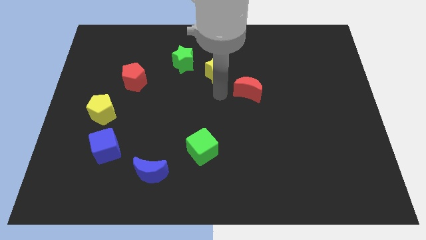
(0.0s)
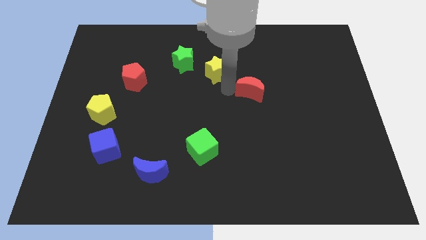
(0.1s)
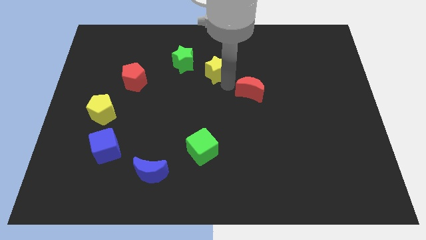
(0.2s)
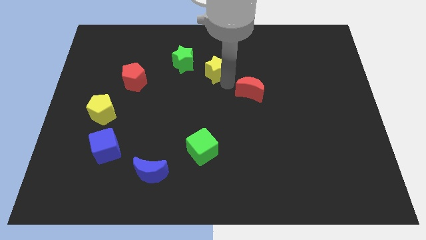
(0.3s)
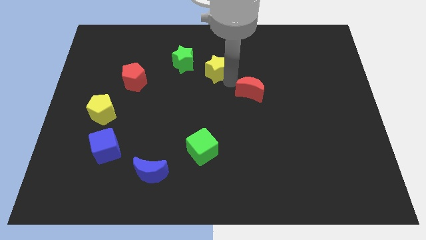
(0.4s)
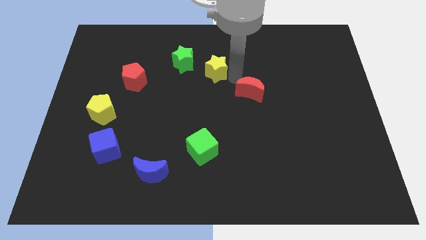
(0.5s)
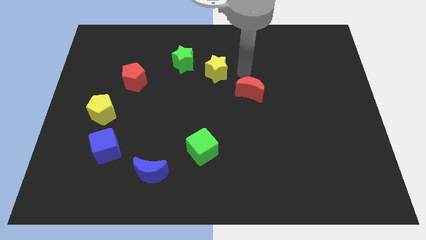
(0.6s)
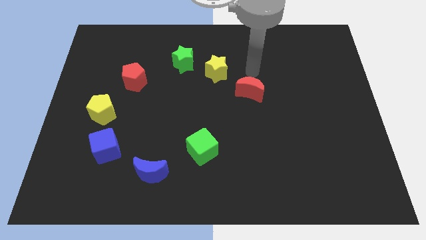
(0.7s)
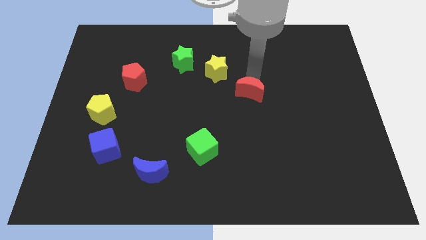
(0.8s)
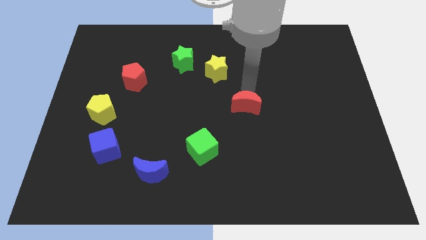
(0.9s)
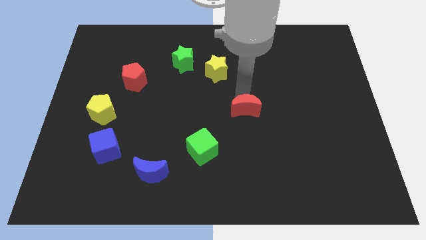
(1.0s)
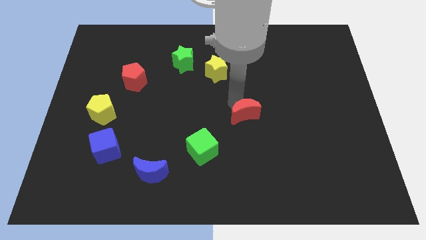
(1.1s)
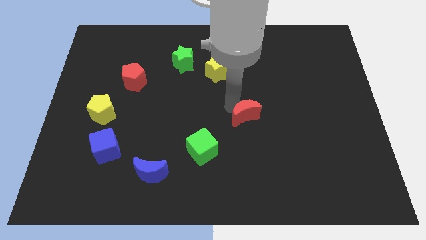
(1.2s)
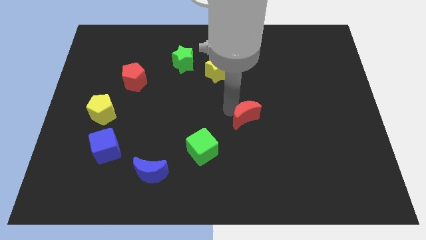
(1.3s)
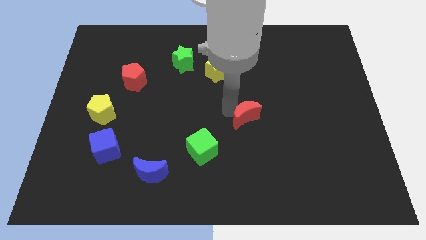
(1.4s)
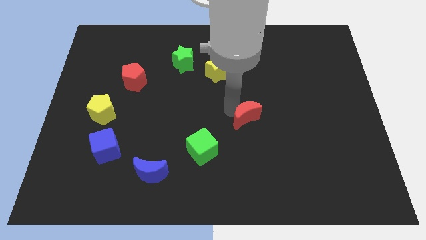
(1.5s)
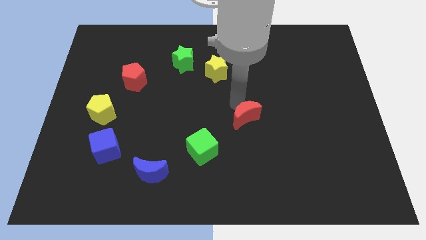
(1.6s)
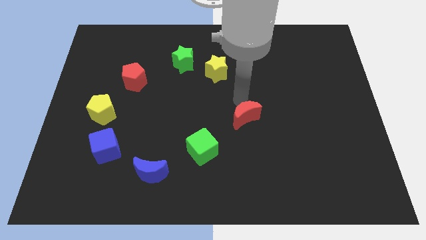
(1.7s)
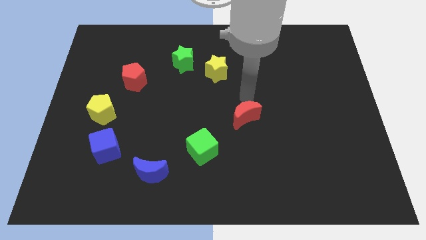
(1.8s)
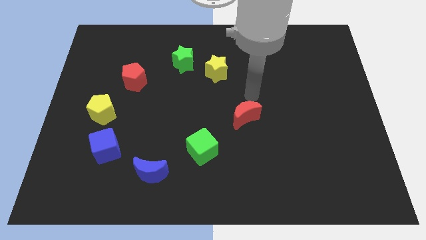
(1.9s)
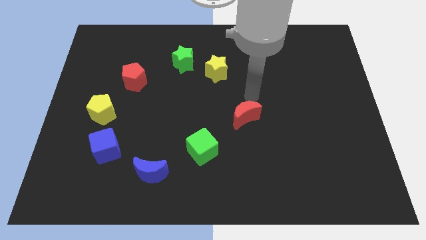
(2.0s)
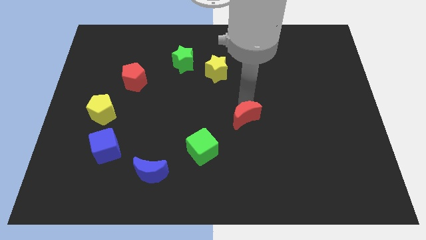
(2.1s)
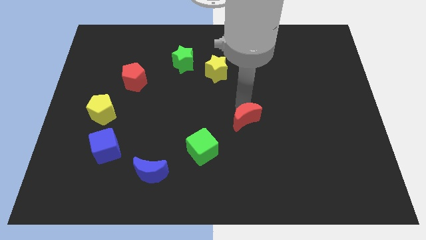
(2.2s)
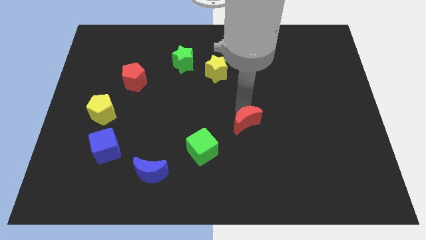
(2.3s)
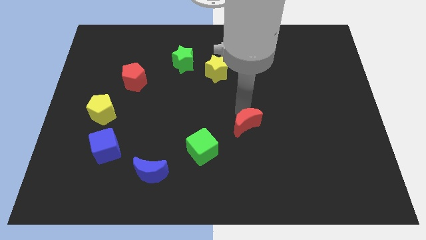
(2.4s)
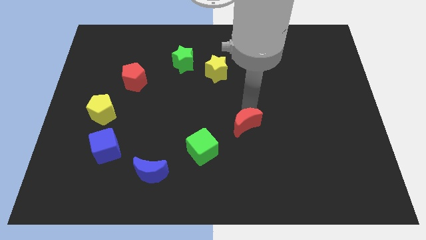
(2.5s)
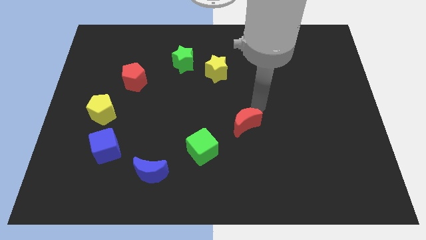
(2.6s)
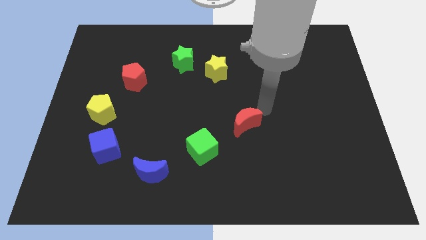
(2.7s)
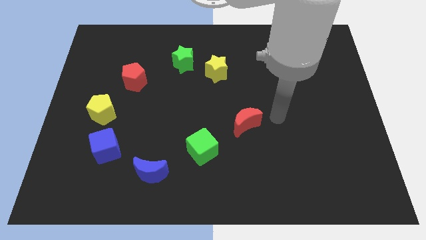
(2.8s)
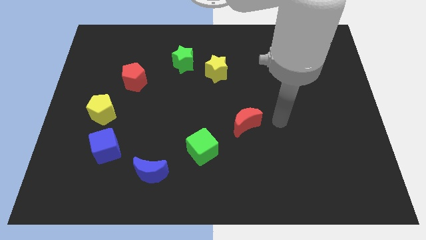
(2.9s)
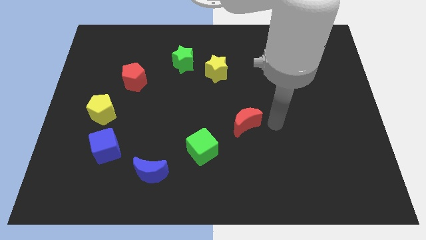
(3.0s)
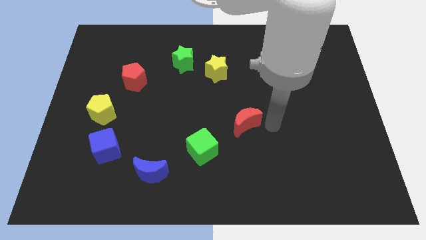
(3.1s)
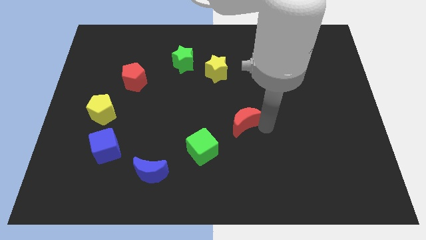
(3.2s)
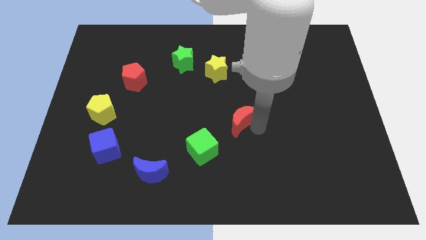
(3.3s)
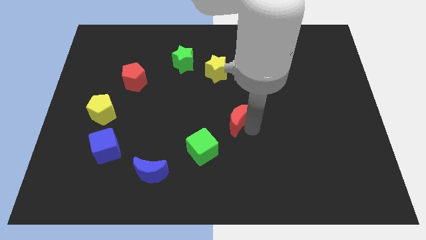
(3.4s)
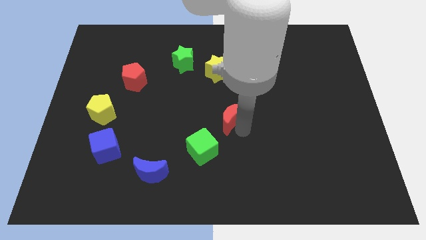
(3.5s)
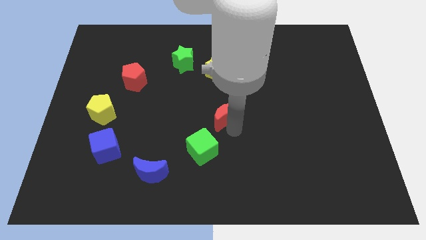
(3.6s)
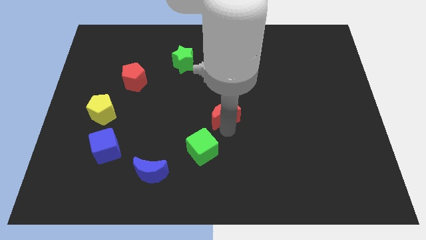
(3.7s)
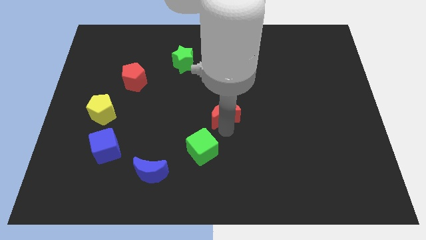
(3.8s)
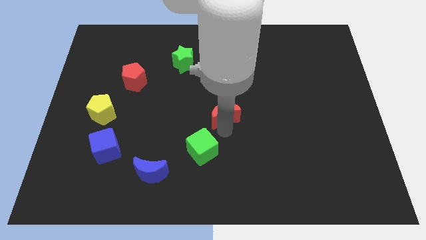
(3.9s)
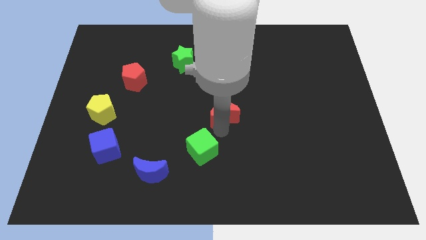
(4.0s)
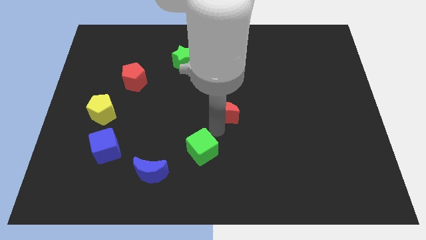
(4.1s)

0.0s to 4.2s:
point your arm between red moon and green cube

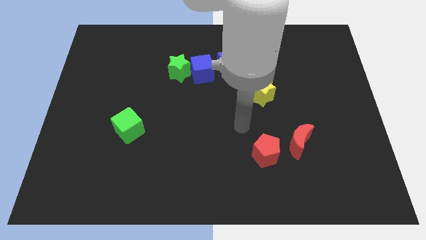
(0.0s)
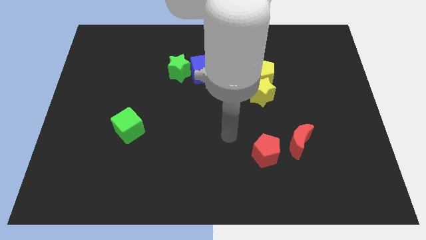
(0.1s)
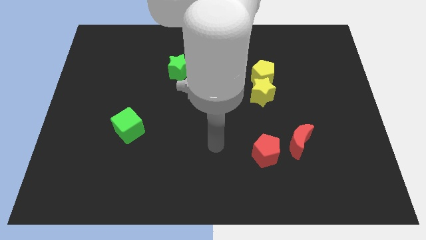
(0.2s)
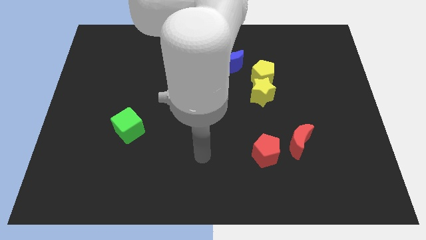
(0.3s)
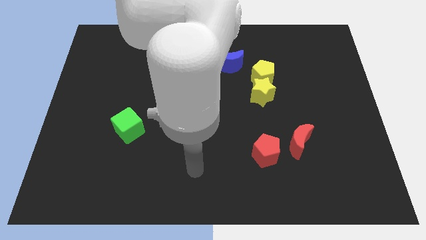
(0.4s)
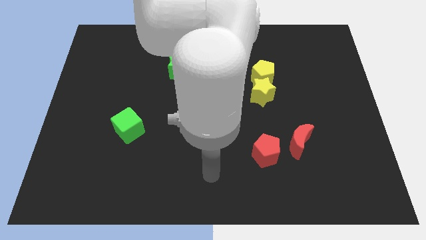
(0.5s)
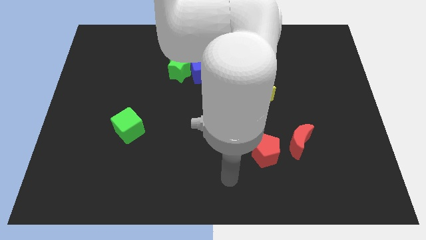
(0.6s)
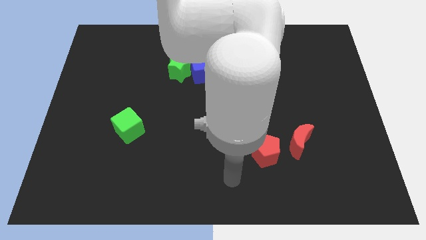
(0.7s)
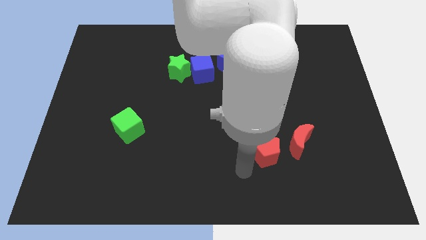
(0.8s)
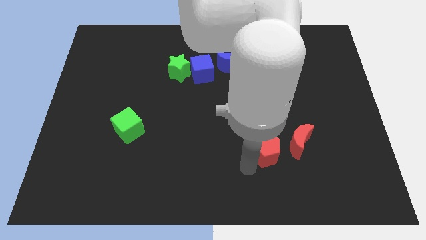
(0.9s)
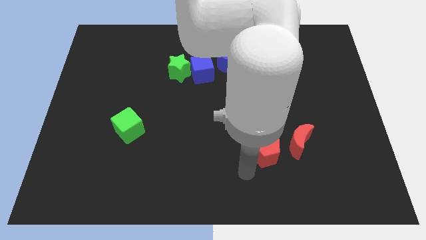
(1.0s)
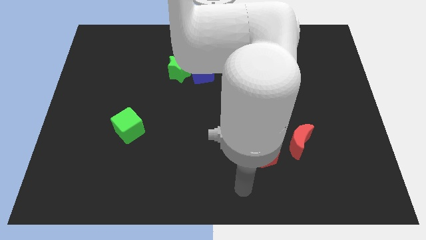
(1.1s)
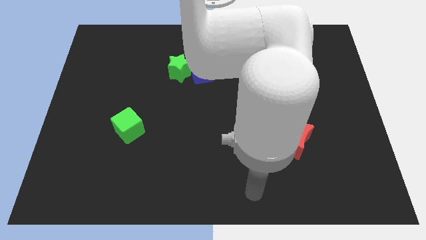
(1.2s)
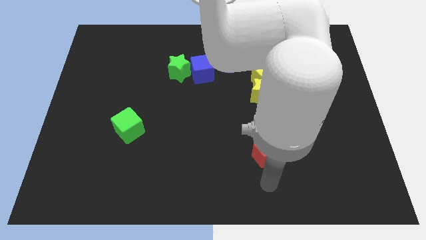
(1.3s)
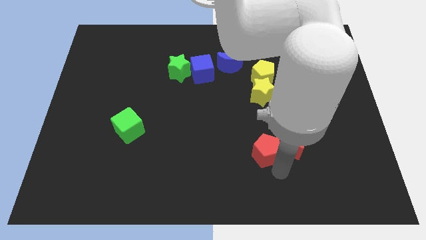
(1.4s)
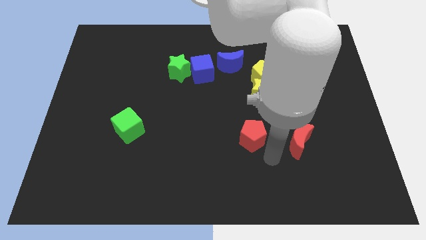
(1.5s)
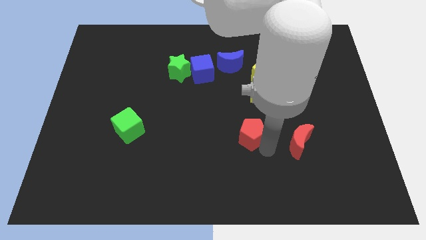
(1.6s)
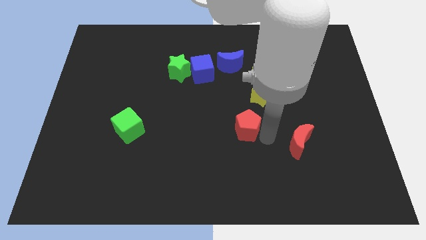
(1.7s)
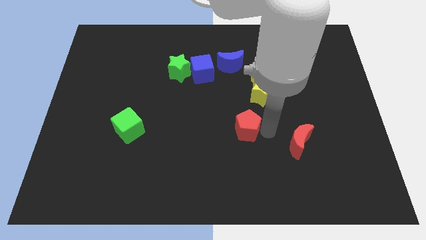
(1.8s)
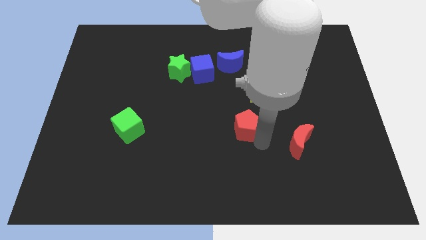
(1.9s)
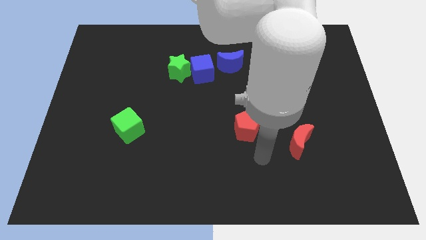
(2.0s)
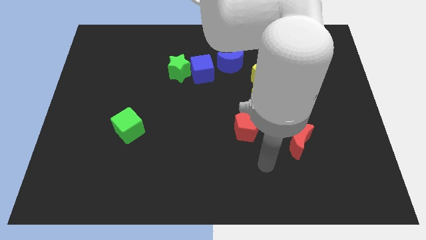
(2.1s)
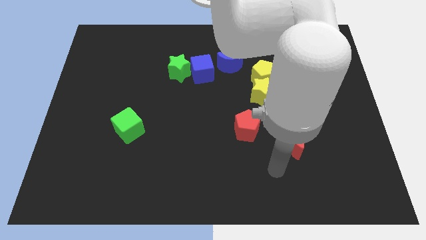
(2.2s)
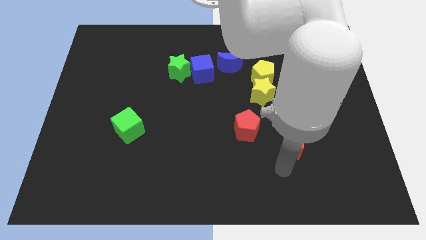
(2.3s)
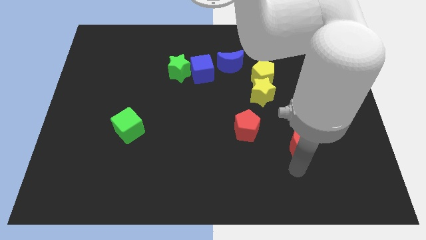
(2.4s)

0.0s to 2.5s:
push the red pentagon horizontally towards green cube

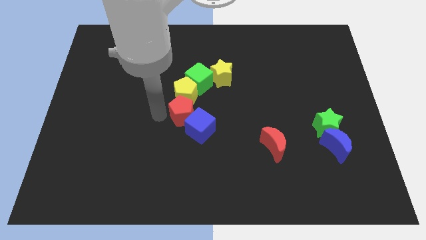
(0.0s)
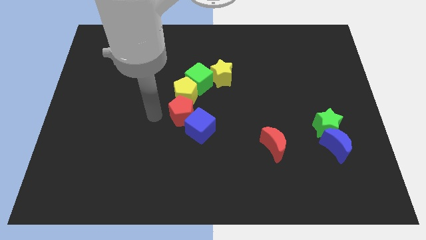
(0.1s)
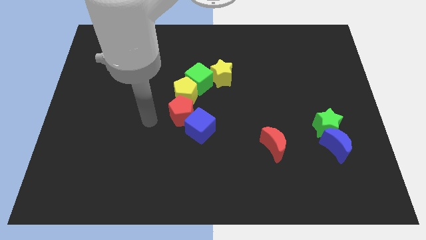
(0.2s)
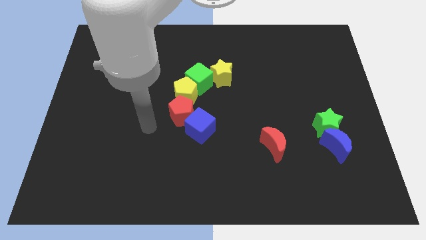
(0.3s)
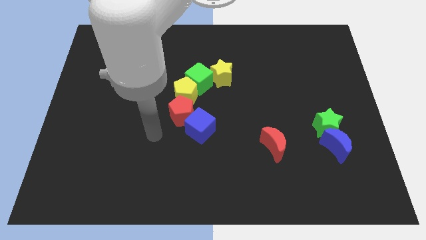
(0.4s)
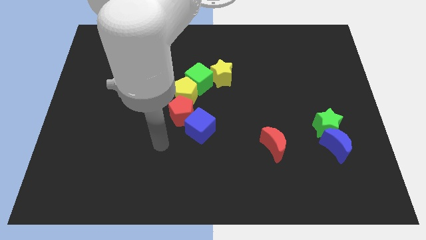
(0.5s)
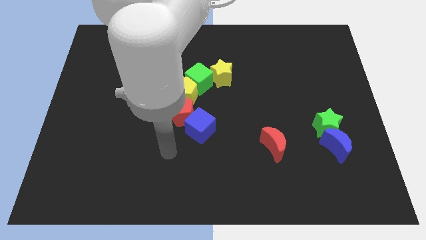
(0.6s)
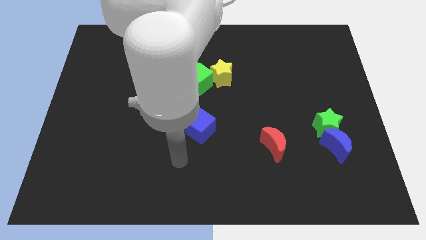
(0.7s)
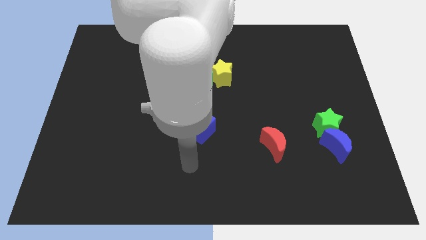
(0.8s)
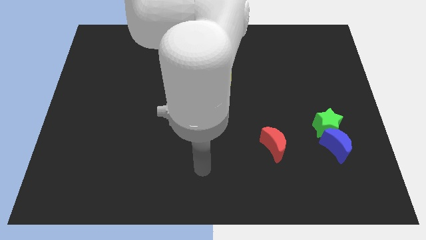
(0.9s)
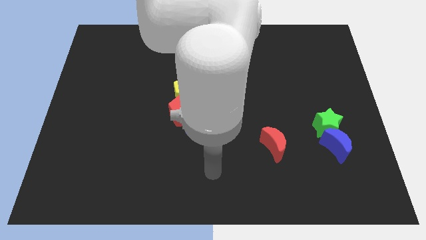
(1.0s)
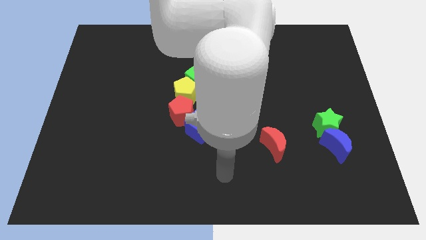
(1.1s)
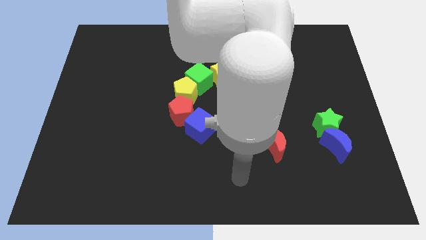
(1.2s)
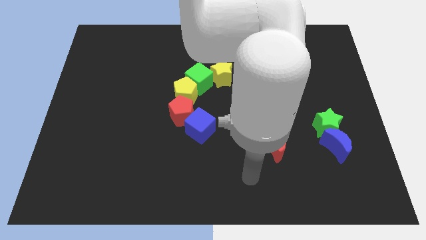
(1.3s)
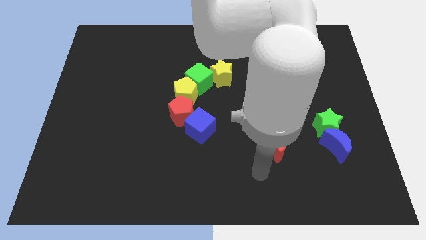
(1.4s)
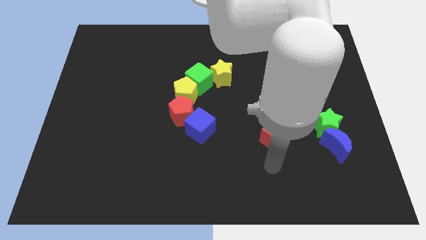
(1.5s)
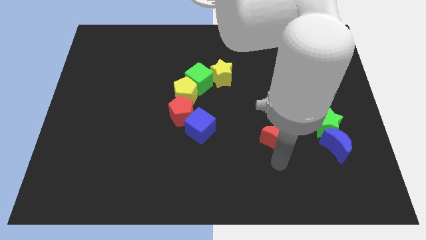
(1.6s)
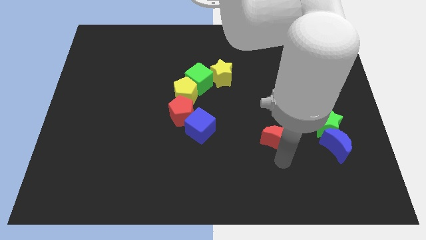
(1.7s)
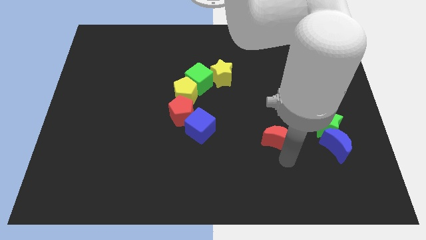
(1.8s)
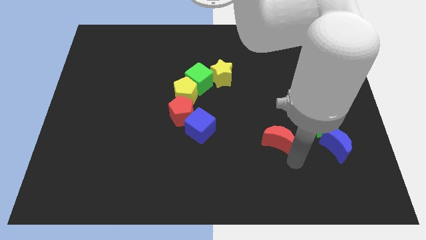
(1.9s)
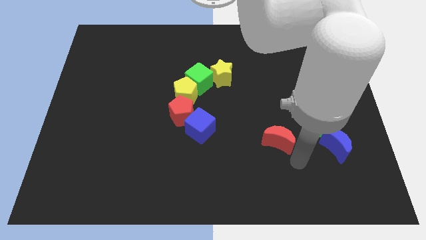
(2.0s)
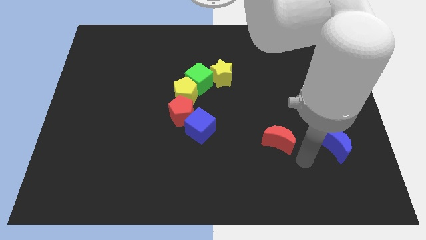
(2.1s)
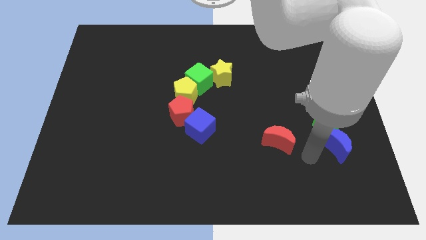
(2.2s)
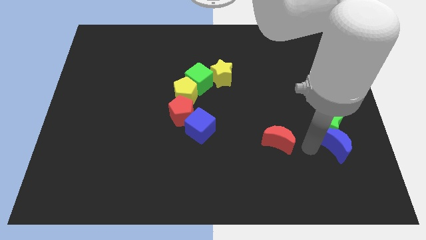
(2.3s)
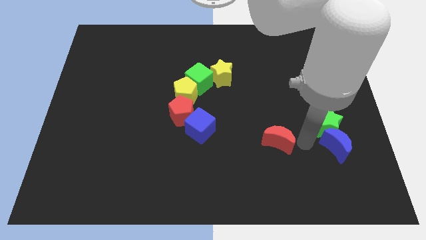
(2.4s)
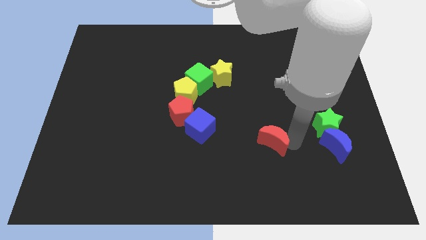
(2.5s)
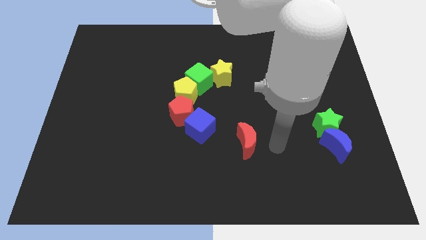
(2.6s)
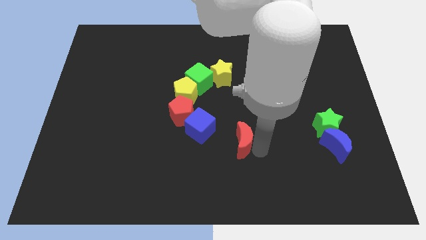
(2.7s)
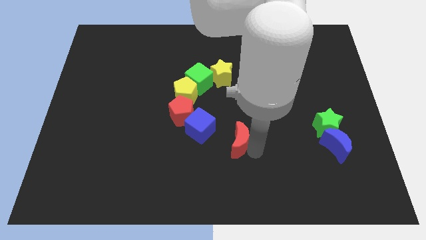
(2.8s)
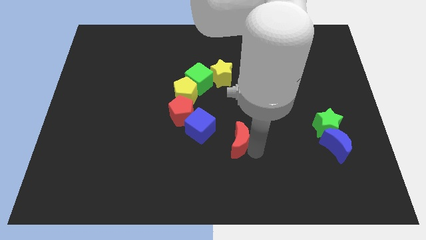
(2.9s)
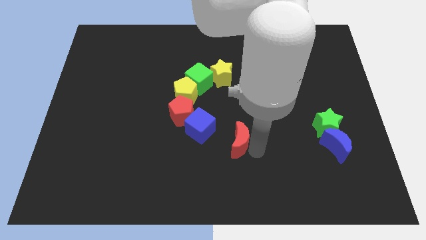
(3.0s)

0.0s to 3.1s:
move your arm into the red moon
